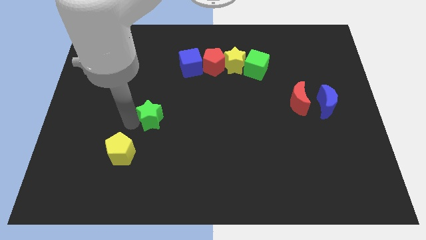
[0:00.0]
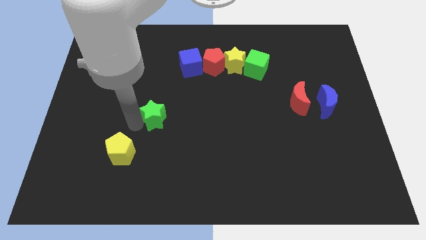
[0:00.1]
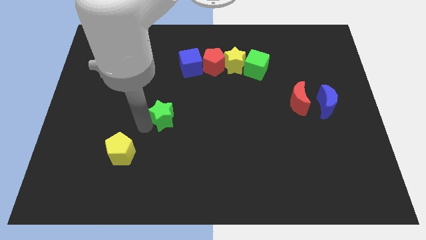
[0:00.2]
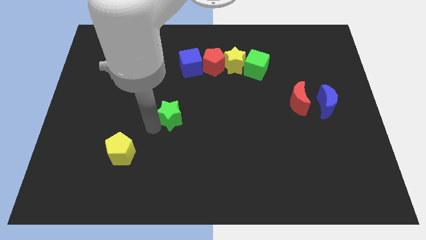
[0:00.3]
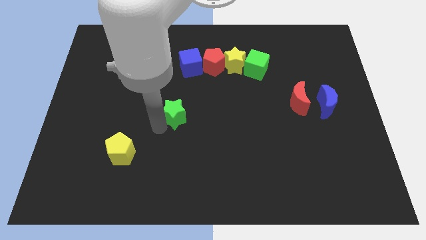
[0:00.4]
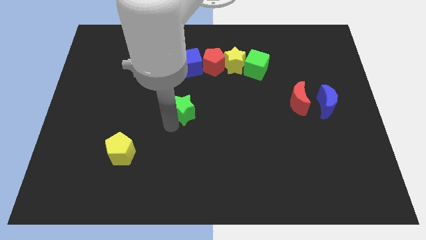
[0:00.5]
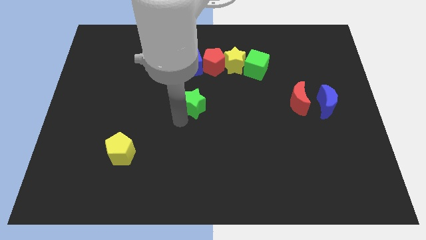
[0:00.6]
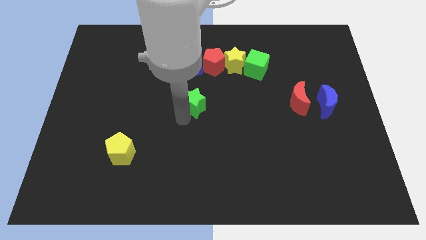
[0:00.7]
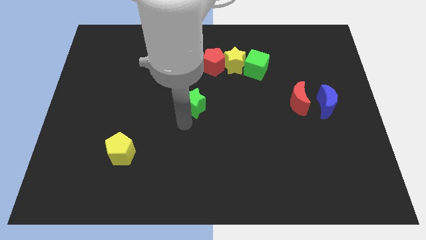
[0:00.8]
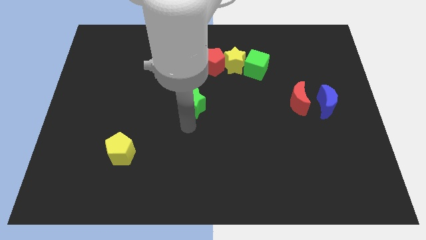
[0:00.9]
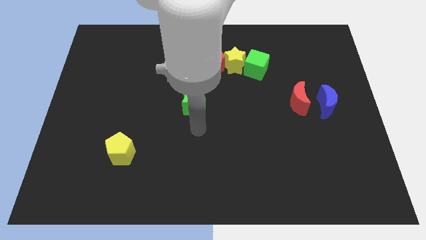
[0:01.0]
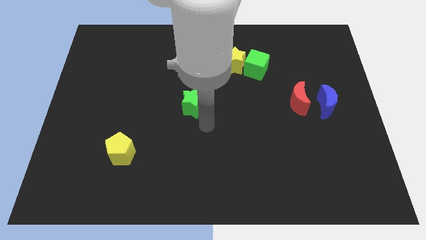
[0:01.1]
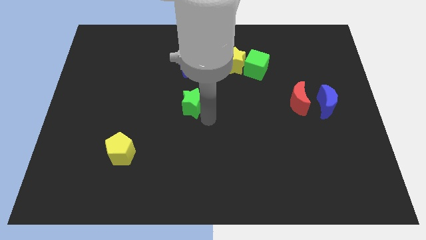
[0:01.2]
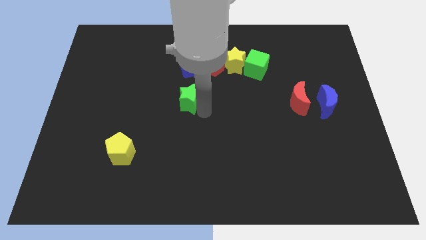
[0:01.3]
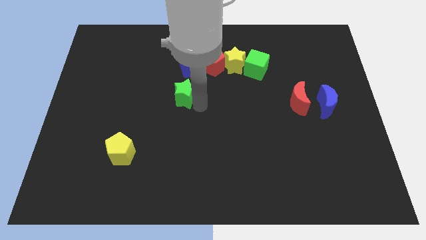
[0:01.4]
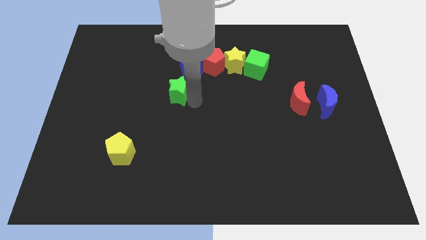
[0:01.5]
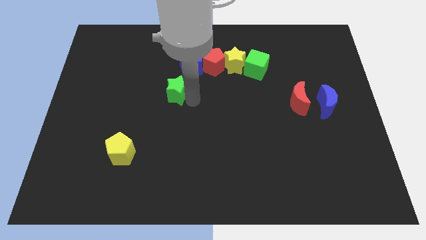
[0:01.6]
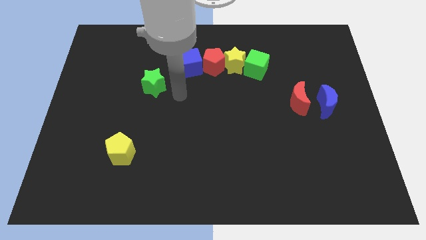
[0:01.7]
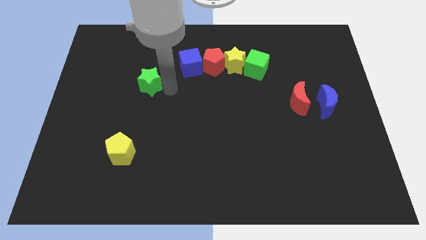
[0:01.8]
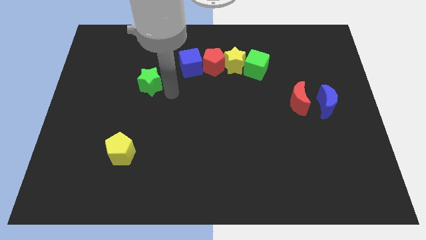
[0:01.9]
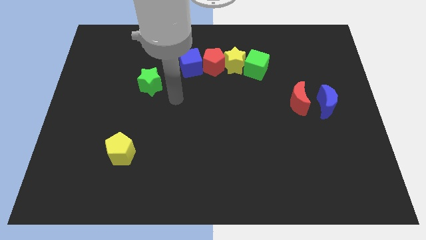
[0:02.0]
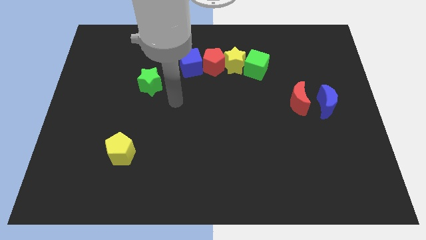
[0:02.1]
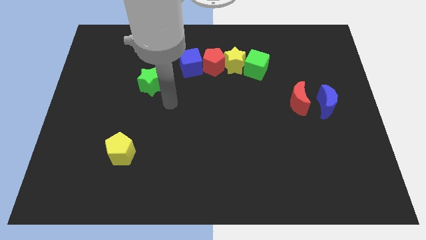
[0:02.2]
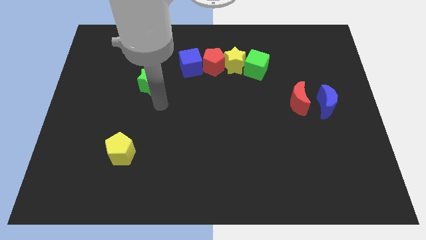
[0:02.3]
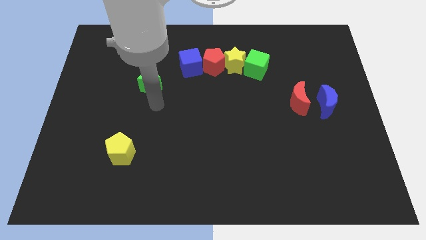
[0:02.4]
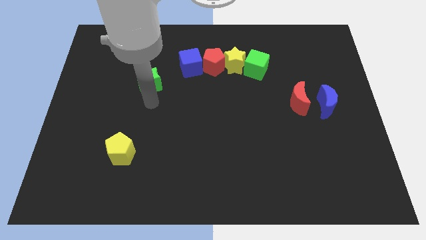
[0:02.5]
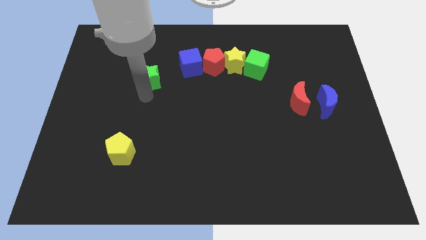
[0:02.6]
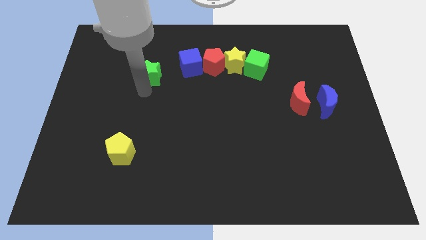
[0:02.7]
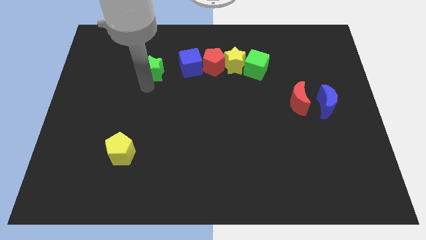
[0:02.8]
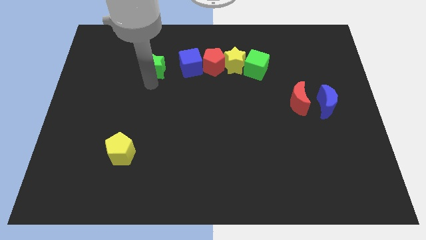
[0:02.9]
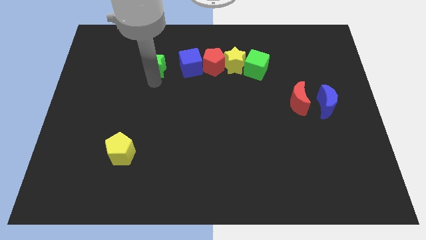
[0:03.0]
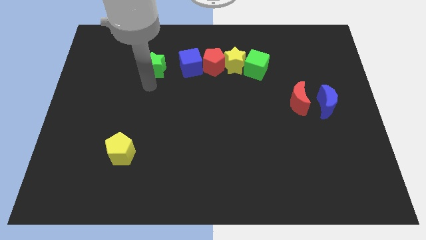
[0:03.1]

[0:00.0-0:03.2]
place green star to the left of blue cube

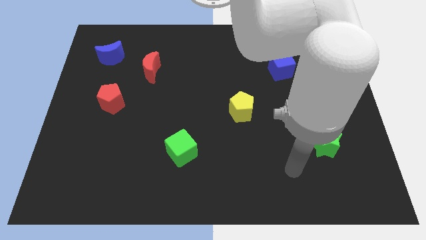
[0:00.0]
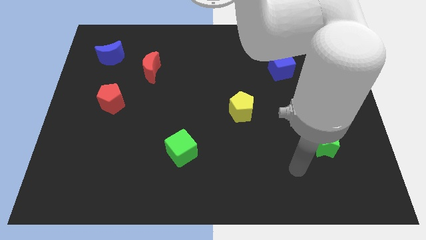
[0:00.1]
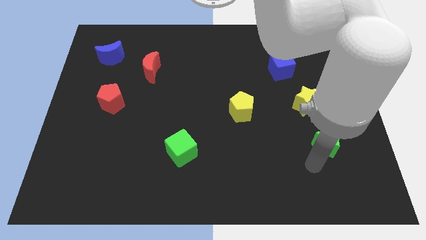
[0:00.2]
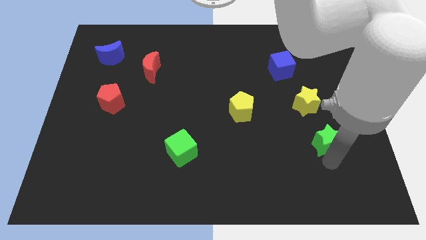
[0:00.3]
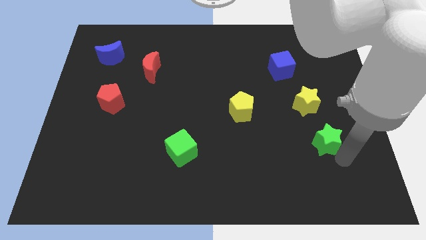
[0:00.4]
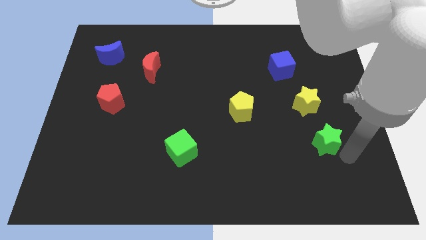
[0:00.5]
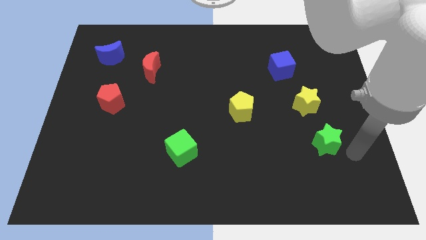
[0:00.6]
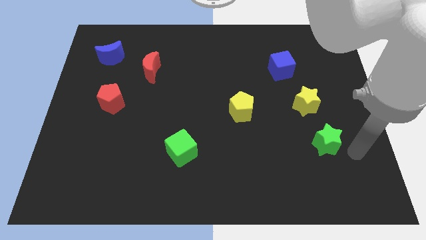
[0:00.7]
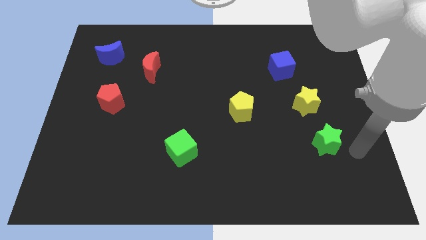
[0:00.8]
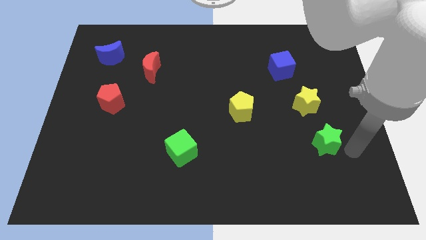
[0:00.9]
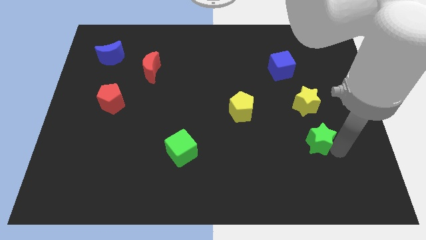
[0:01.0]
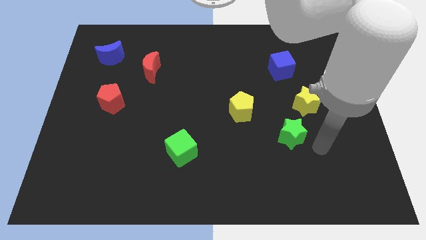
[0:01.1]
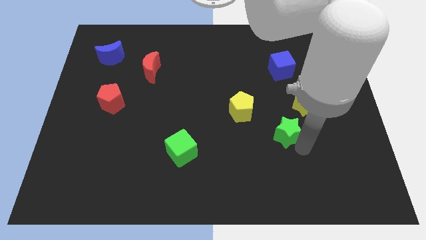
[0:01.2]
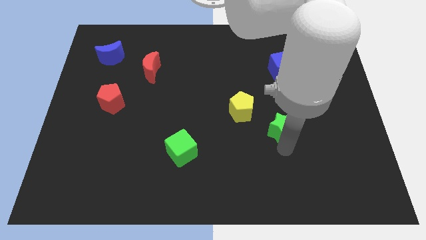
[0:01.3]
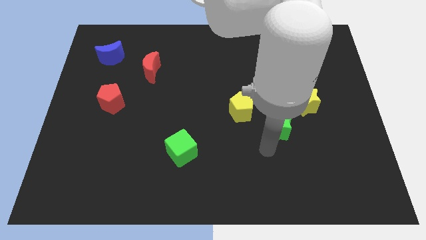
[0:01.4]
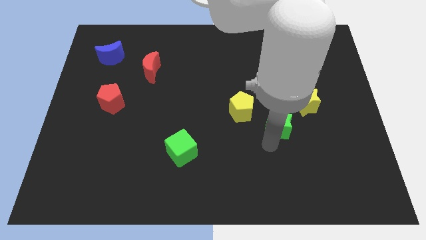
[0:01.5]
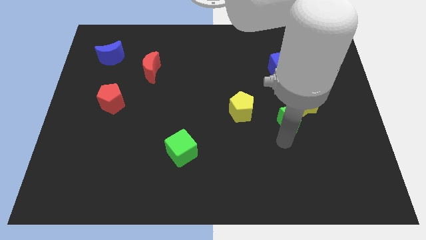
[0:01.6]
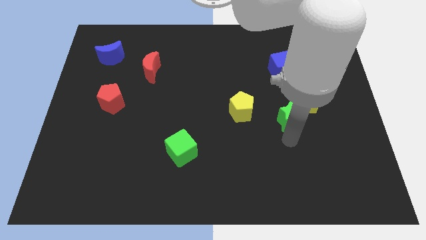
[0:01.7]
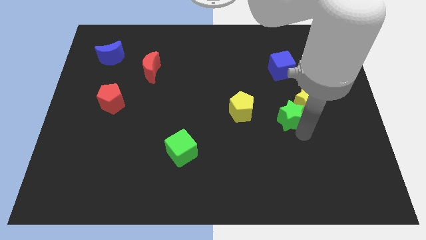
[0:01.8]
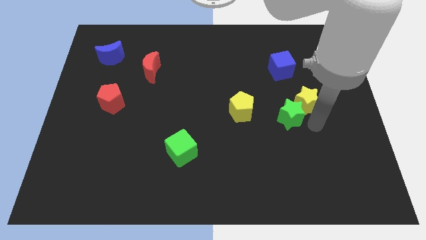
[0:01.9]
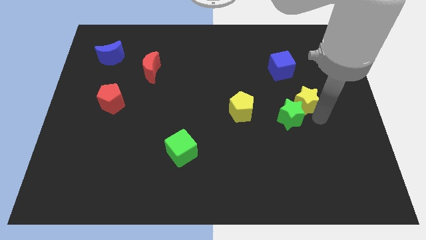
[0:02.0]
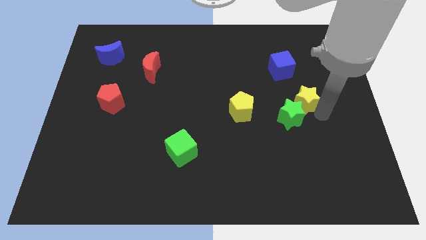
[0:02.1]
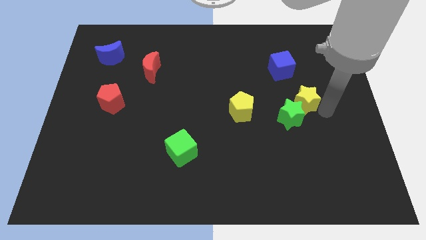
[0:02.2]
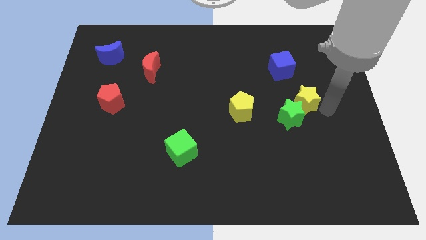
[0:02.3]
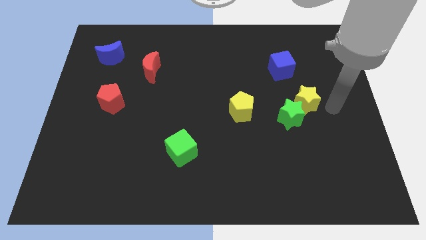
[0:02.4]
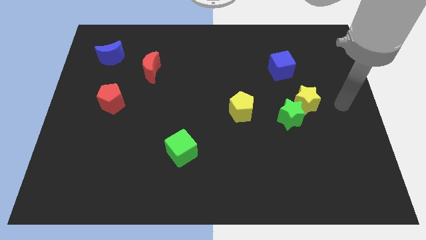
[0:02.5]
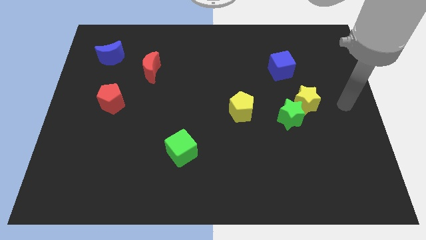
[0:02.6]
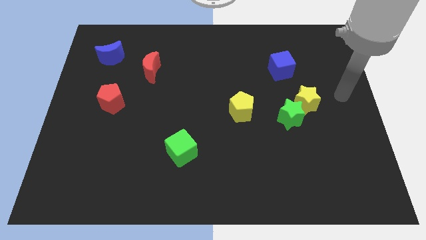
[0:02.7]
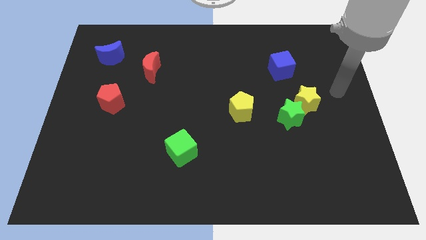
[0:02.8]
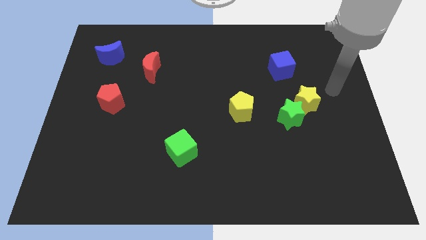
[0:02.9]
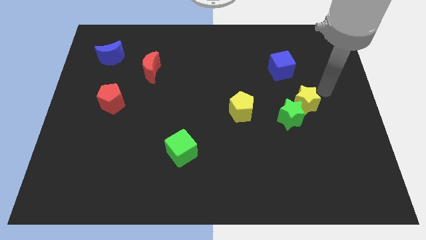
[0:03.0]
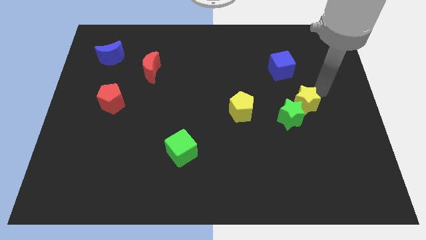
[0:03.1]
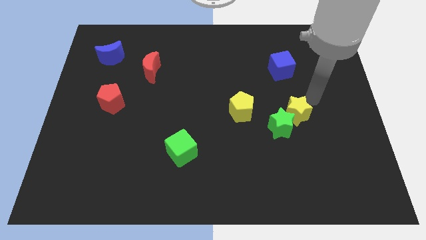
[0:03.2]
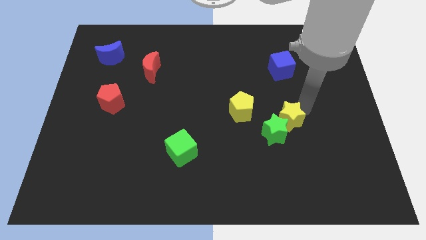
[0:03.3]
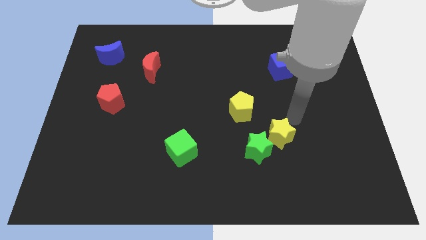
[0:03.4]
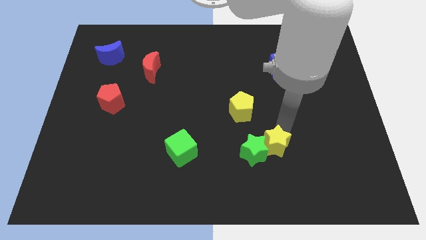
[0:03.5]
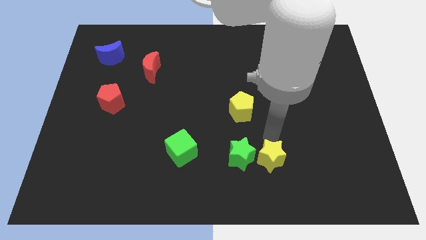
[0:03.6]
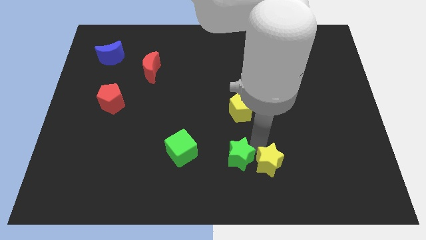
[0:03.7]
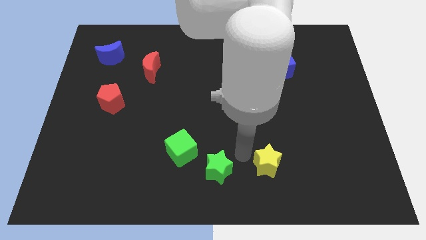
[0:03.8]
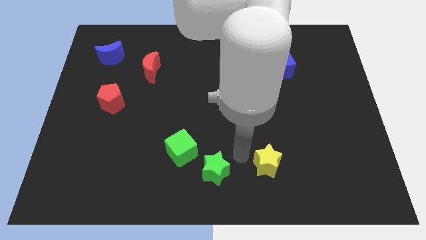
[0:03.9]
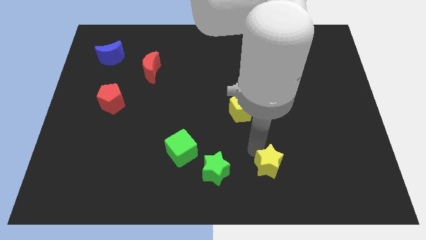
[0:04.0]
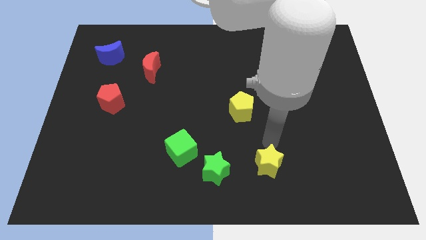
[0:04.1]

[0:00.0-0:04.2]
push the both stars towards the bottom center

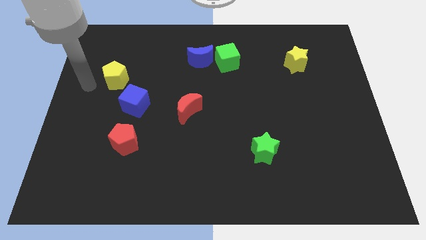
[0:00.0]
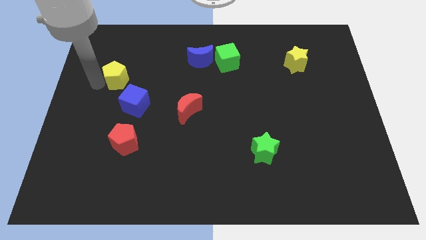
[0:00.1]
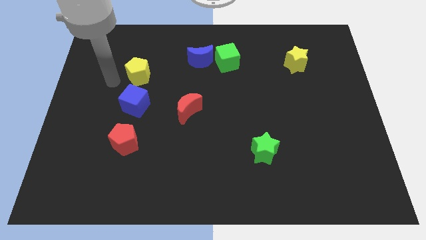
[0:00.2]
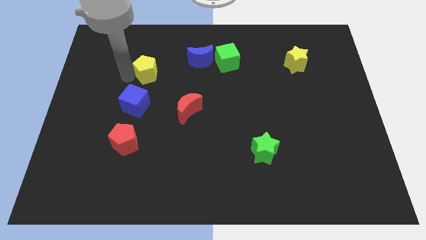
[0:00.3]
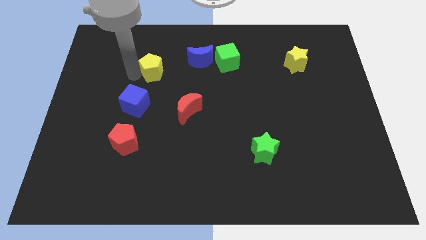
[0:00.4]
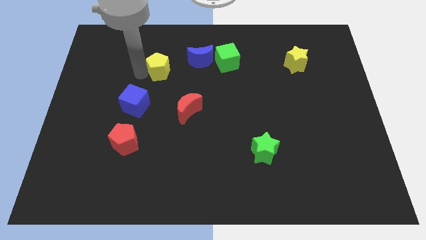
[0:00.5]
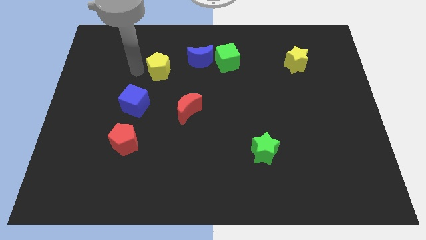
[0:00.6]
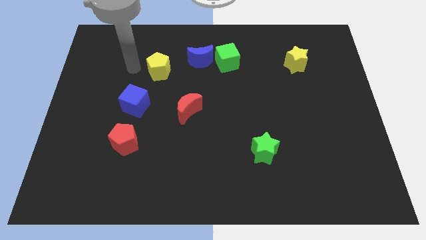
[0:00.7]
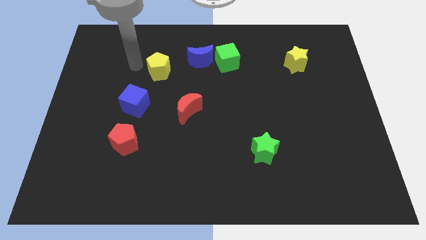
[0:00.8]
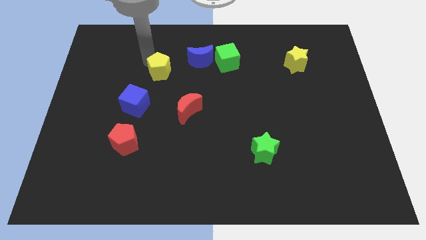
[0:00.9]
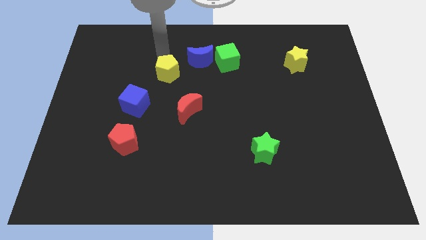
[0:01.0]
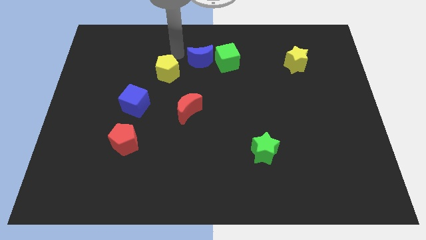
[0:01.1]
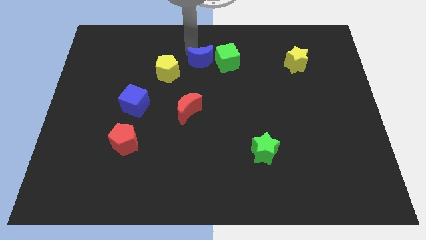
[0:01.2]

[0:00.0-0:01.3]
push the yellow pentagon towards the center of the board

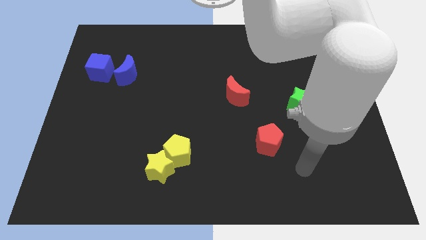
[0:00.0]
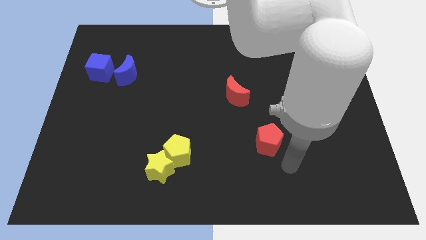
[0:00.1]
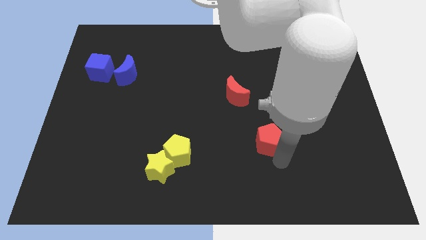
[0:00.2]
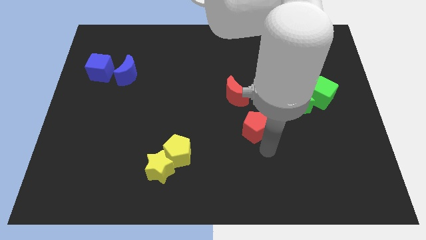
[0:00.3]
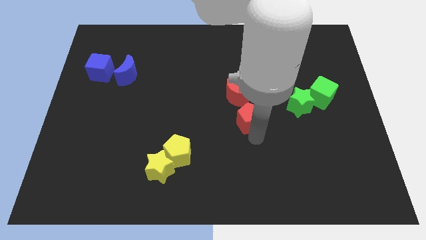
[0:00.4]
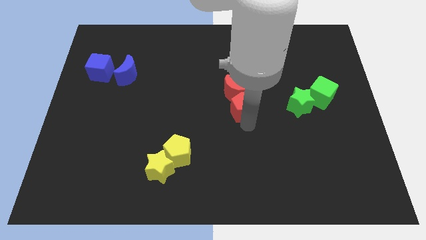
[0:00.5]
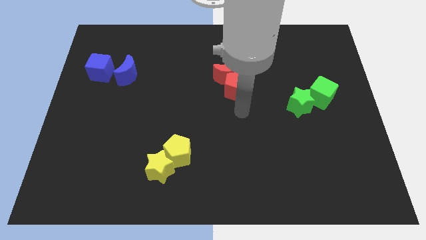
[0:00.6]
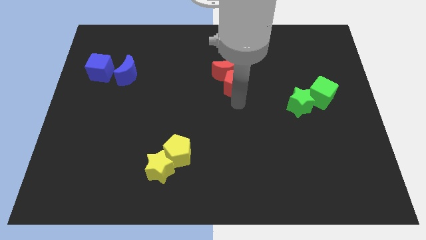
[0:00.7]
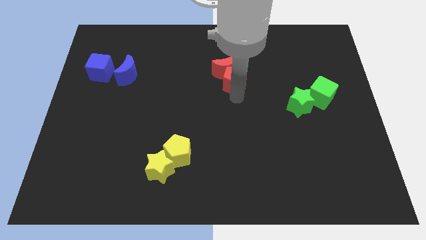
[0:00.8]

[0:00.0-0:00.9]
push the red pentagon into the red moon
